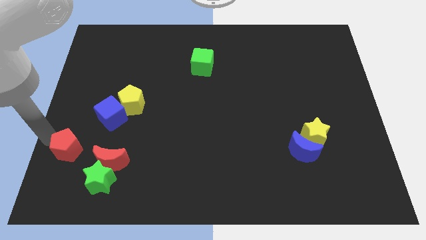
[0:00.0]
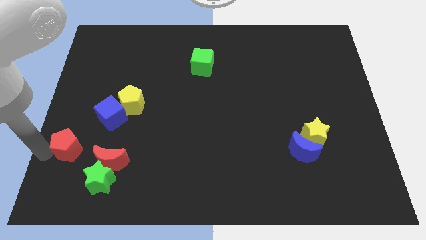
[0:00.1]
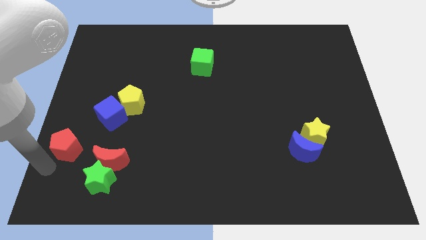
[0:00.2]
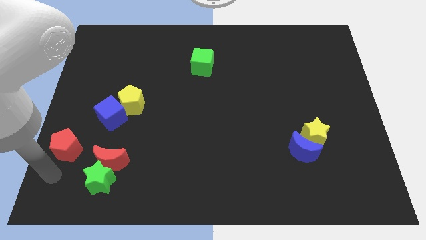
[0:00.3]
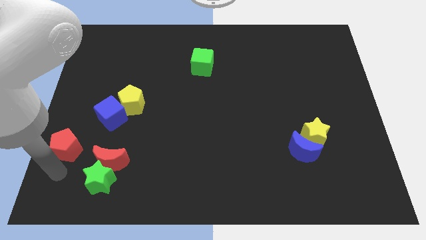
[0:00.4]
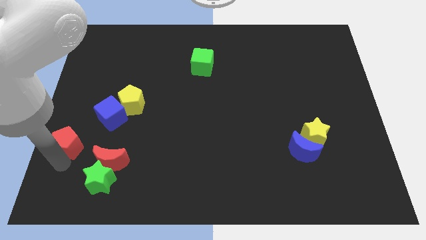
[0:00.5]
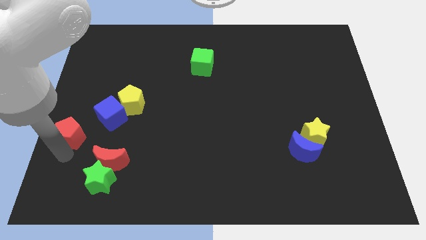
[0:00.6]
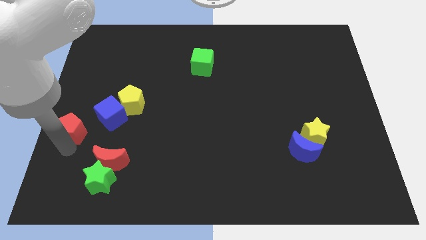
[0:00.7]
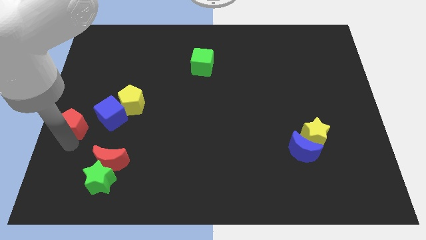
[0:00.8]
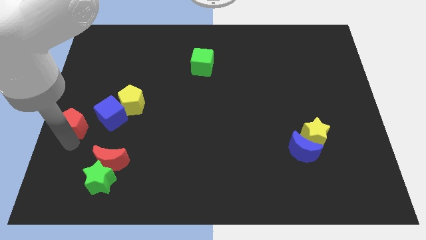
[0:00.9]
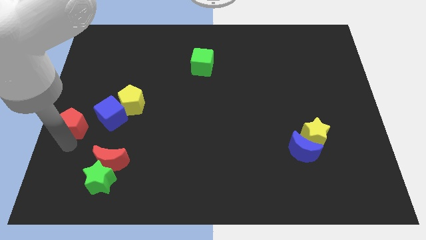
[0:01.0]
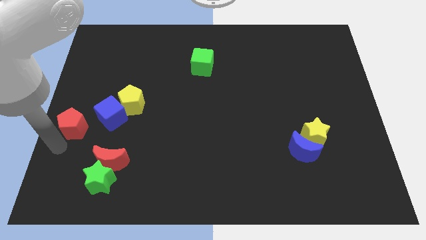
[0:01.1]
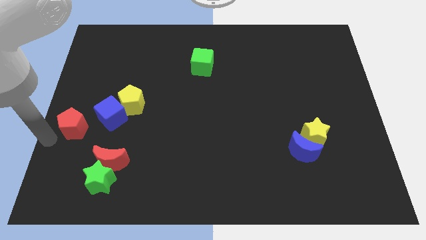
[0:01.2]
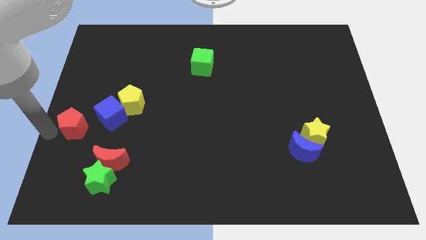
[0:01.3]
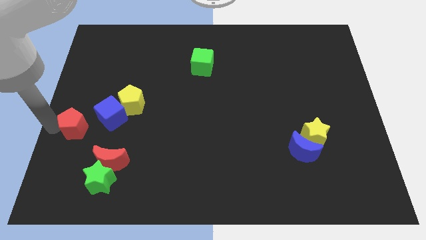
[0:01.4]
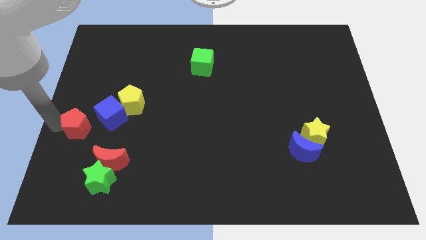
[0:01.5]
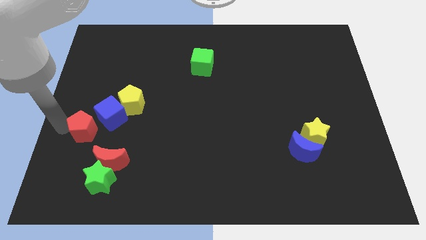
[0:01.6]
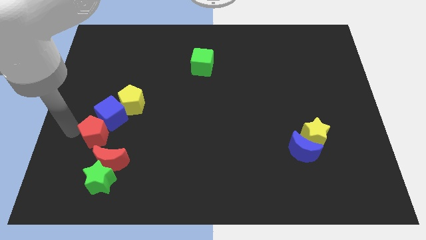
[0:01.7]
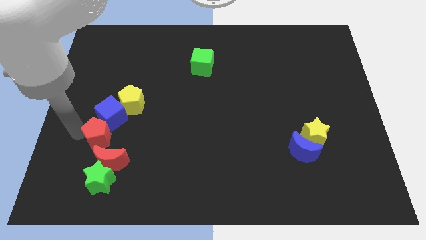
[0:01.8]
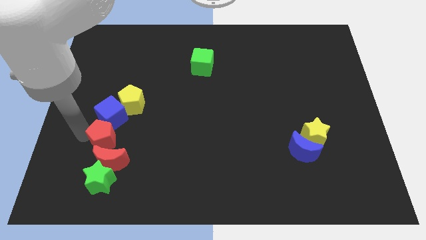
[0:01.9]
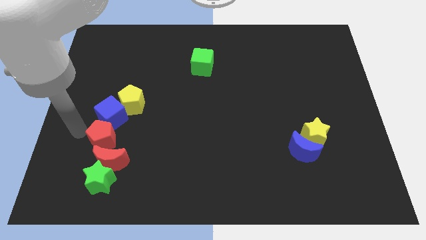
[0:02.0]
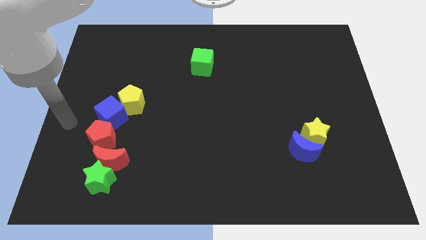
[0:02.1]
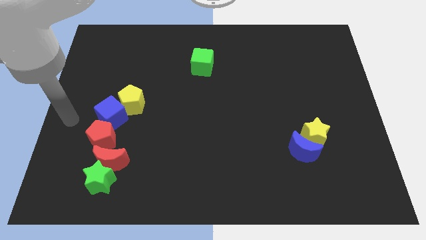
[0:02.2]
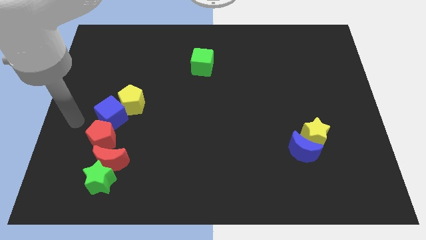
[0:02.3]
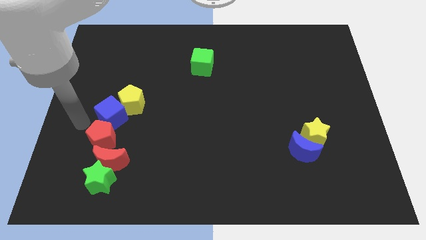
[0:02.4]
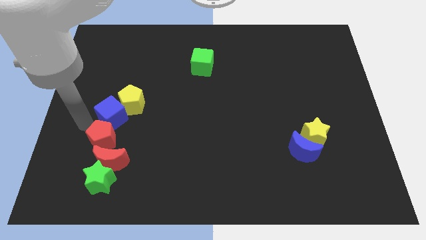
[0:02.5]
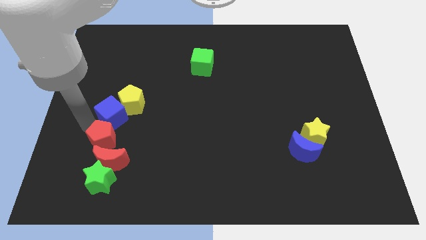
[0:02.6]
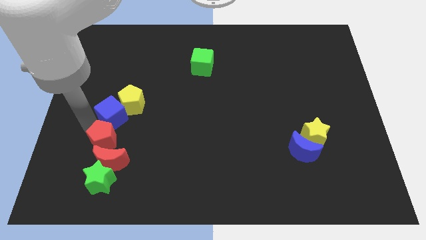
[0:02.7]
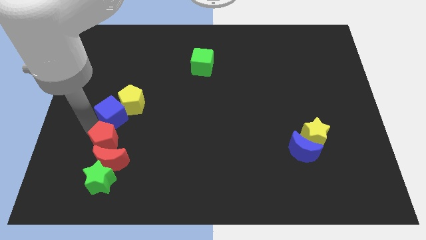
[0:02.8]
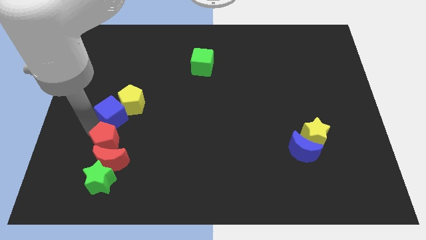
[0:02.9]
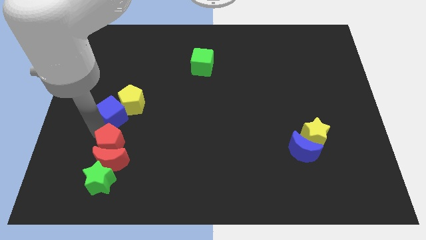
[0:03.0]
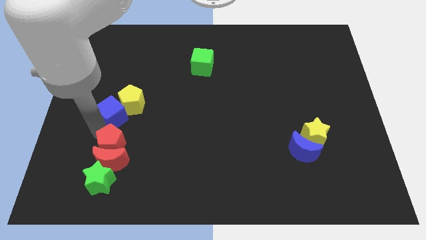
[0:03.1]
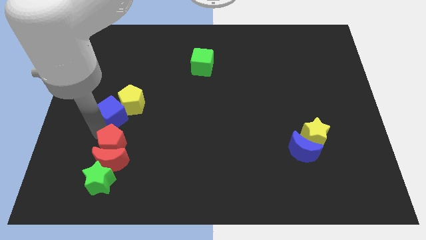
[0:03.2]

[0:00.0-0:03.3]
slide the red pentagon above the red crescent

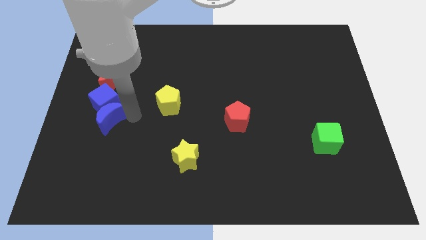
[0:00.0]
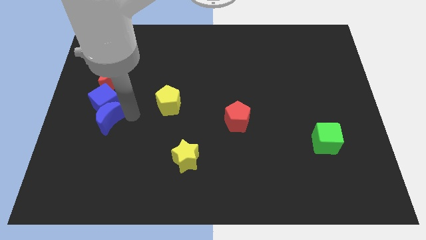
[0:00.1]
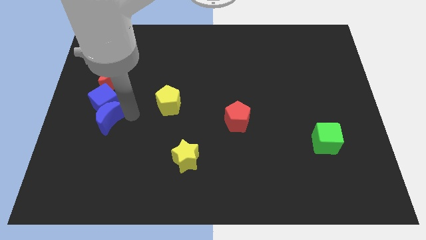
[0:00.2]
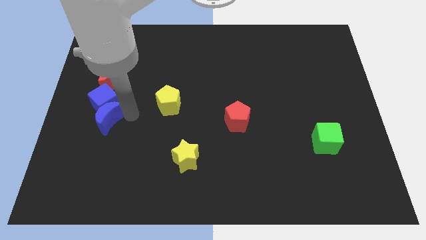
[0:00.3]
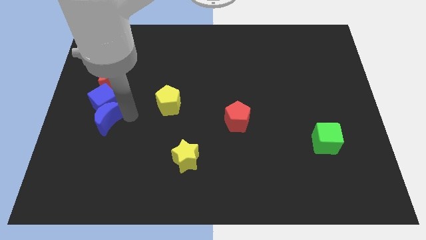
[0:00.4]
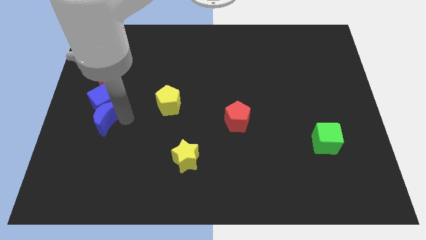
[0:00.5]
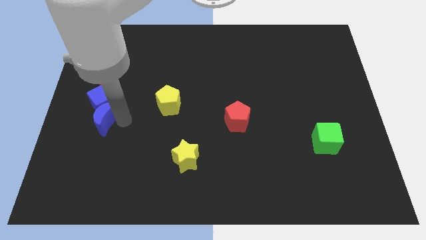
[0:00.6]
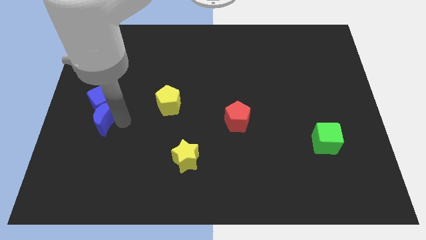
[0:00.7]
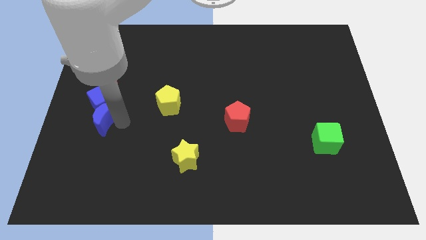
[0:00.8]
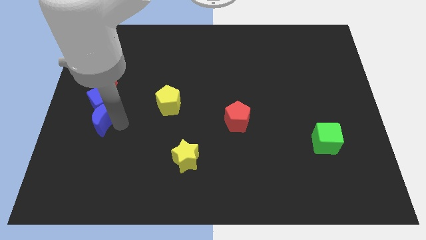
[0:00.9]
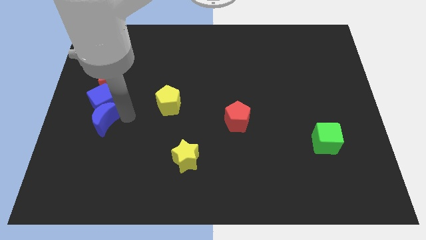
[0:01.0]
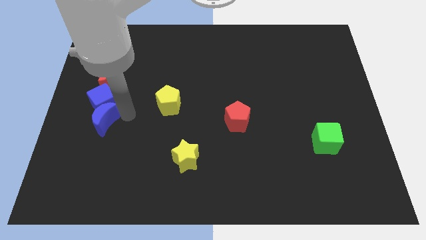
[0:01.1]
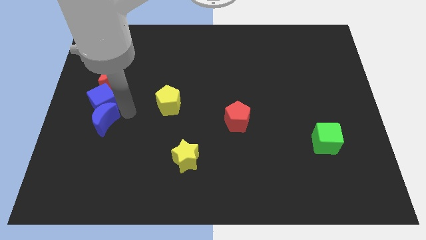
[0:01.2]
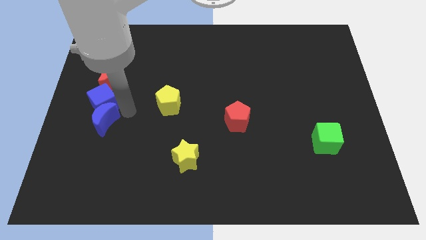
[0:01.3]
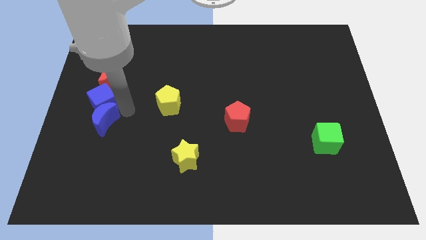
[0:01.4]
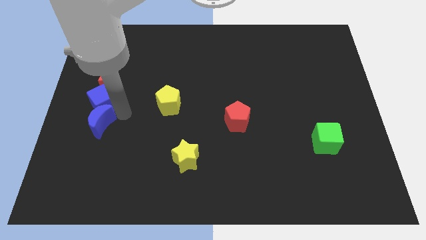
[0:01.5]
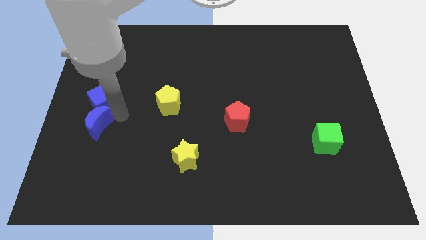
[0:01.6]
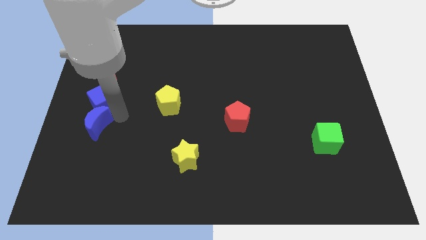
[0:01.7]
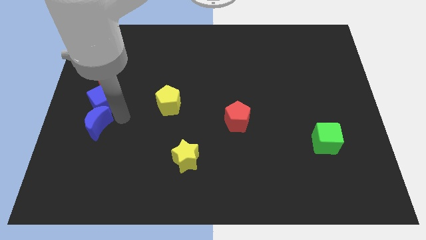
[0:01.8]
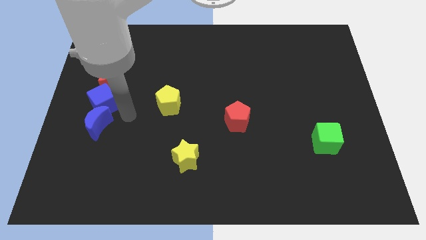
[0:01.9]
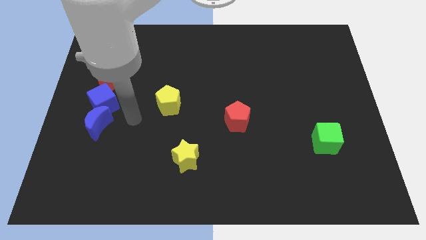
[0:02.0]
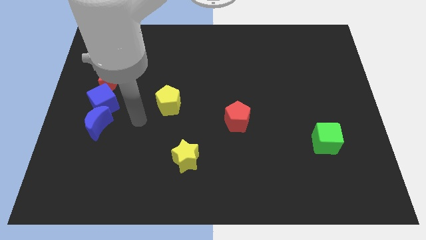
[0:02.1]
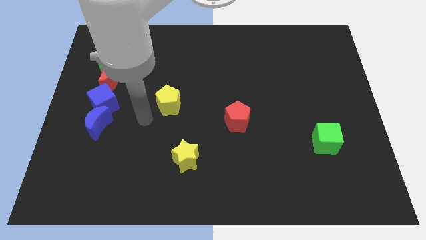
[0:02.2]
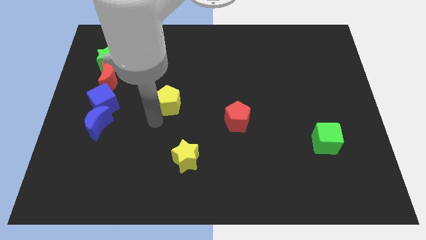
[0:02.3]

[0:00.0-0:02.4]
move the blue moon slightly to the left

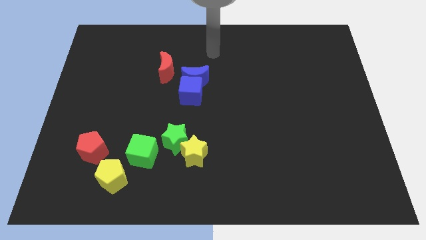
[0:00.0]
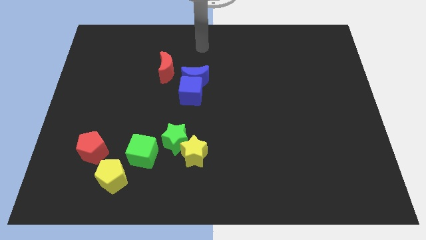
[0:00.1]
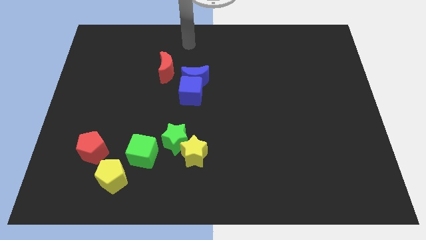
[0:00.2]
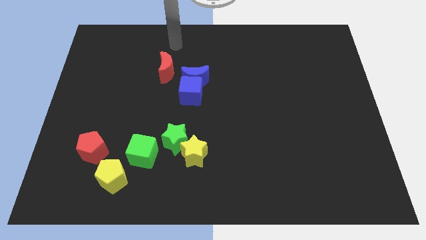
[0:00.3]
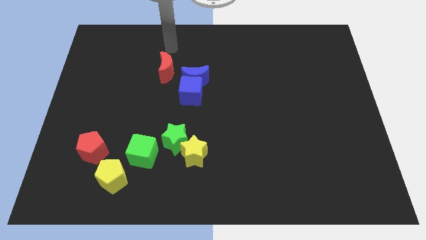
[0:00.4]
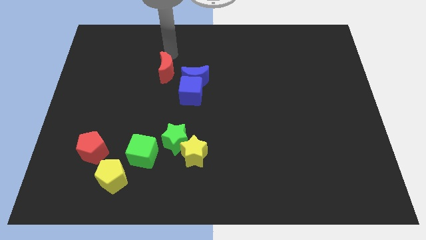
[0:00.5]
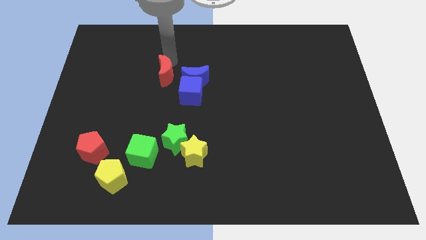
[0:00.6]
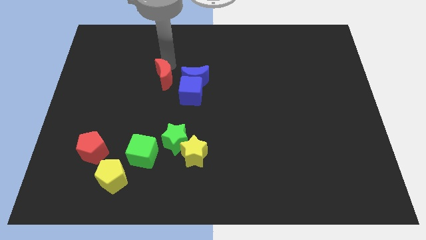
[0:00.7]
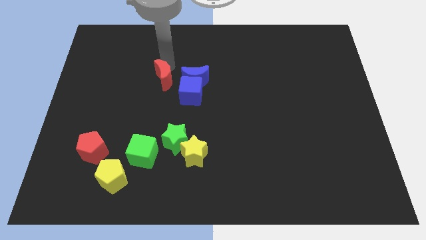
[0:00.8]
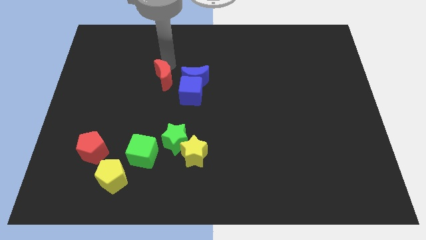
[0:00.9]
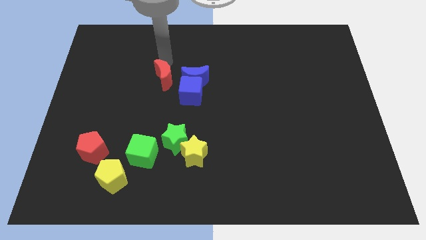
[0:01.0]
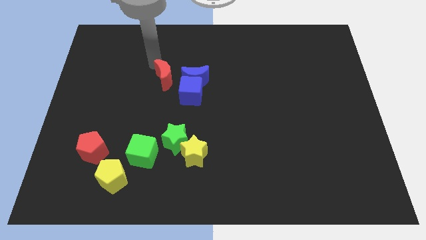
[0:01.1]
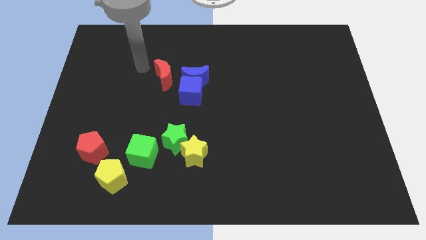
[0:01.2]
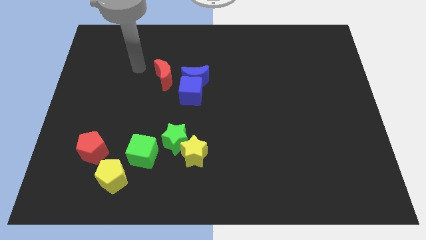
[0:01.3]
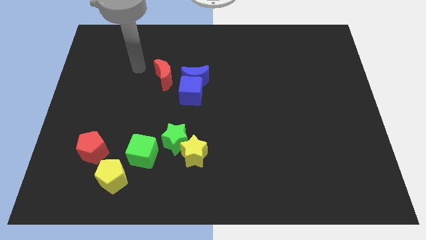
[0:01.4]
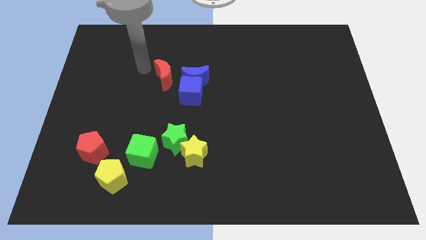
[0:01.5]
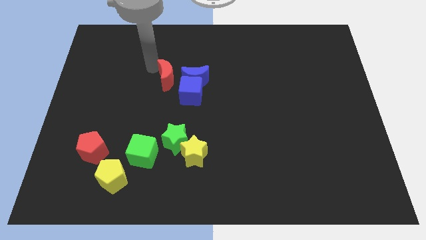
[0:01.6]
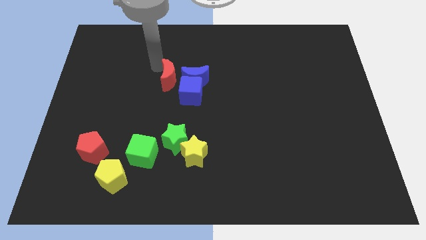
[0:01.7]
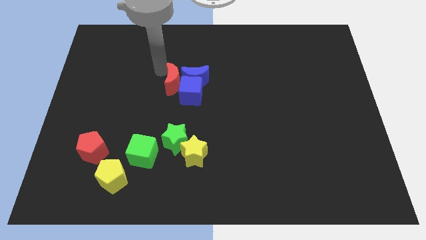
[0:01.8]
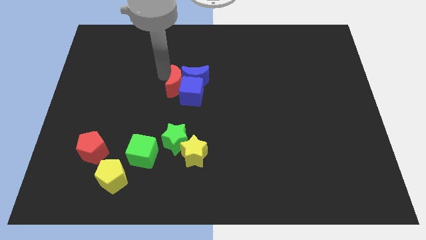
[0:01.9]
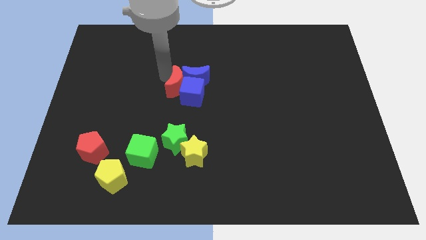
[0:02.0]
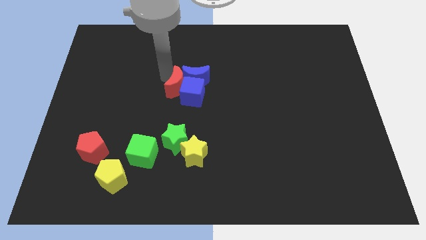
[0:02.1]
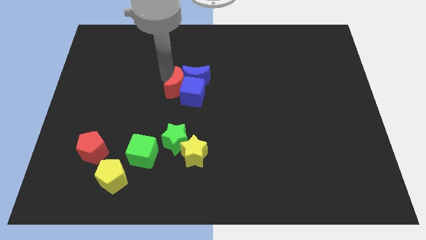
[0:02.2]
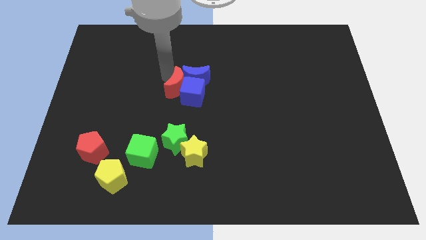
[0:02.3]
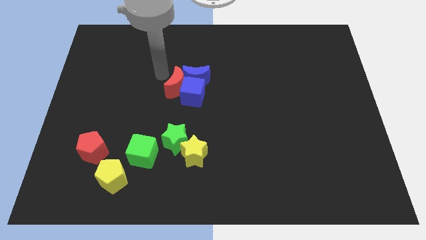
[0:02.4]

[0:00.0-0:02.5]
push the red crescent into the blue cube

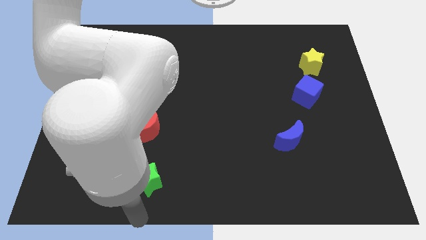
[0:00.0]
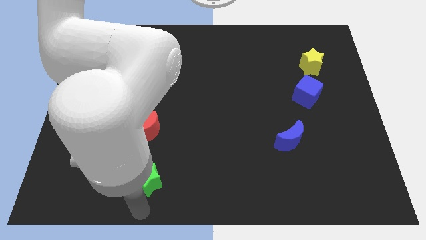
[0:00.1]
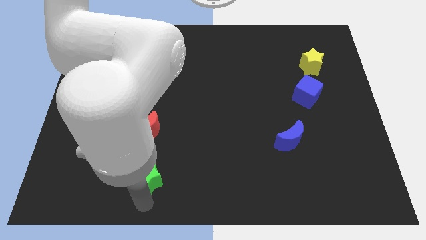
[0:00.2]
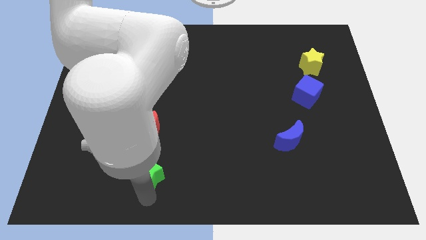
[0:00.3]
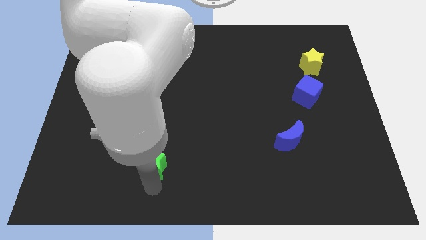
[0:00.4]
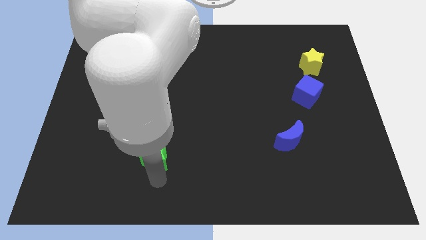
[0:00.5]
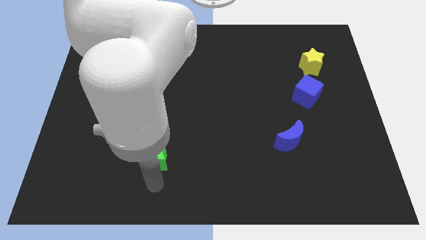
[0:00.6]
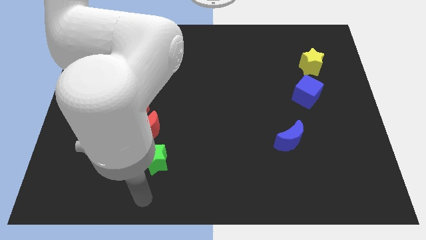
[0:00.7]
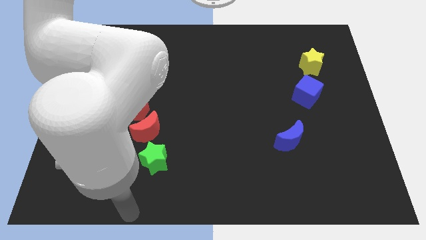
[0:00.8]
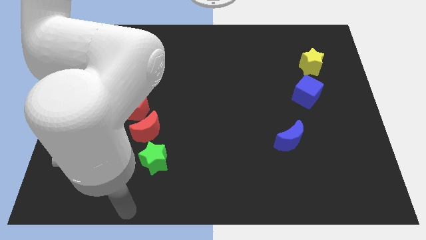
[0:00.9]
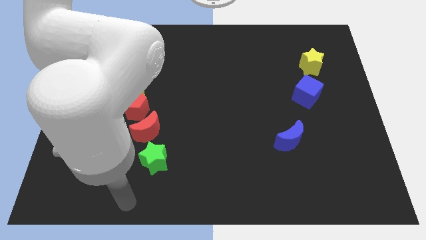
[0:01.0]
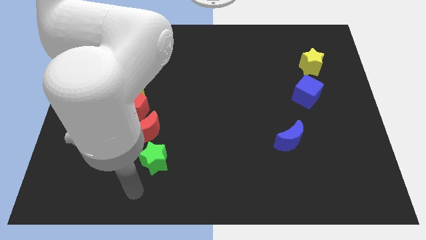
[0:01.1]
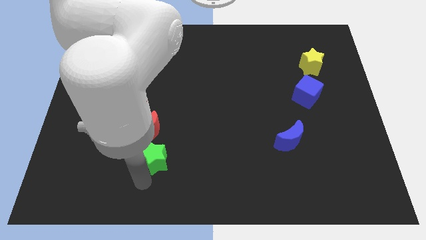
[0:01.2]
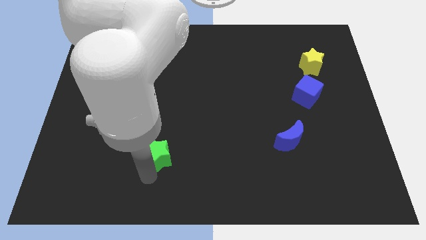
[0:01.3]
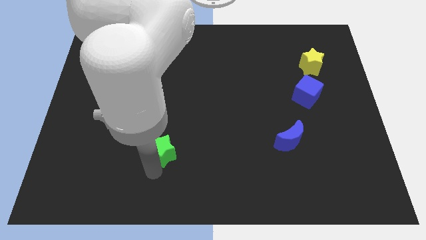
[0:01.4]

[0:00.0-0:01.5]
push green star towards red crescent
